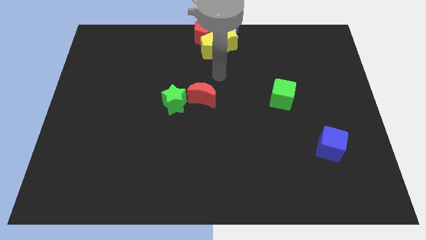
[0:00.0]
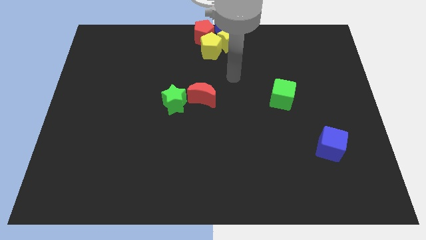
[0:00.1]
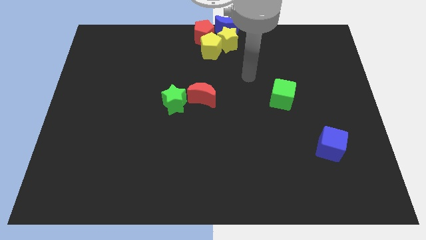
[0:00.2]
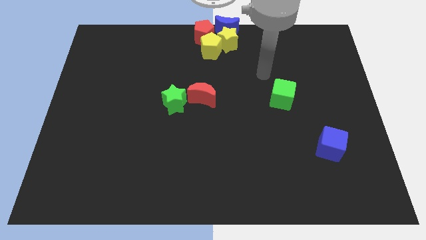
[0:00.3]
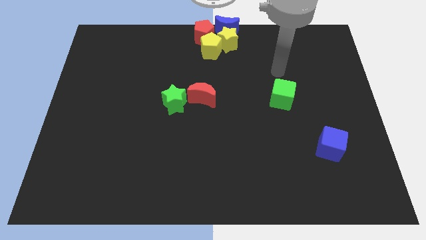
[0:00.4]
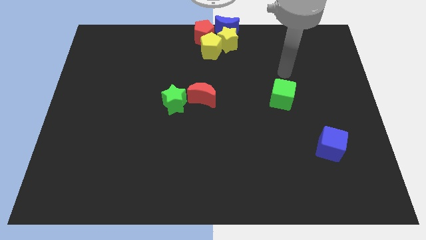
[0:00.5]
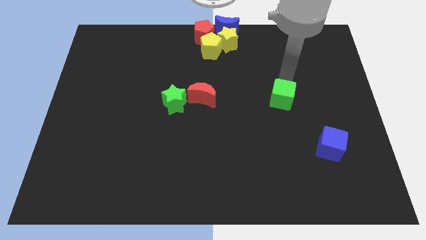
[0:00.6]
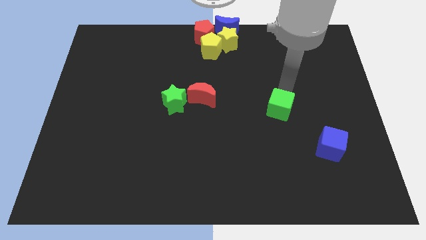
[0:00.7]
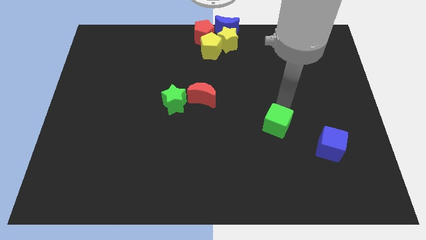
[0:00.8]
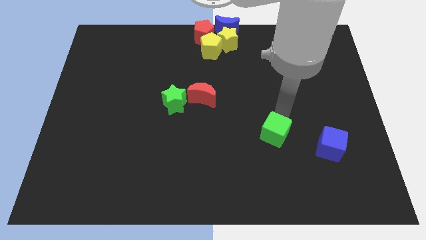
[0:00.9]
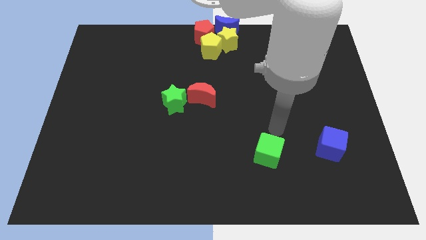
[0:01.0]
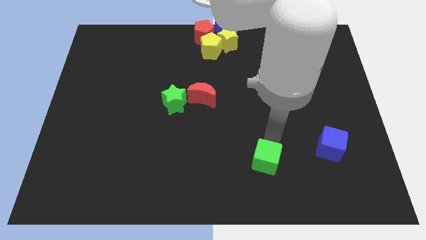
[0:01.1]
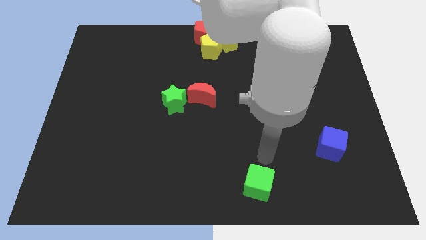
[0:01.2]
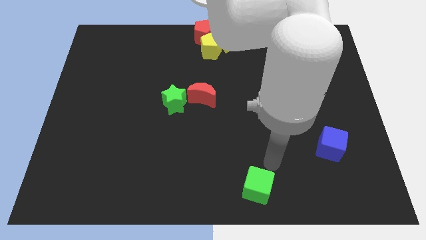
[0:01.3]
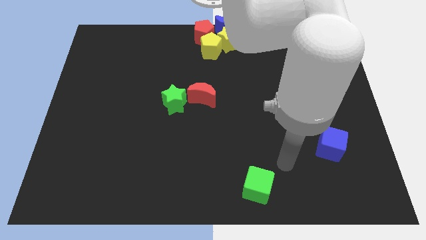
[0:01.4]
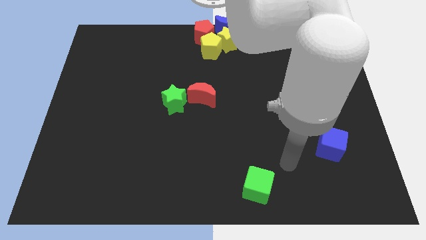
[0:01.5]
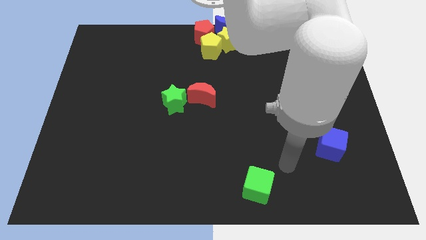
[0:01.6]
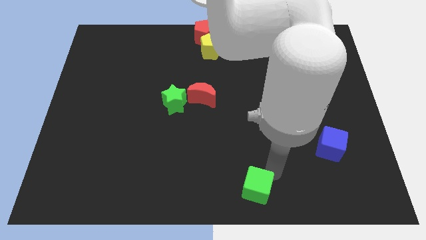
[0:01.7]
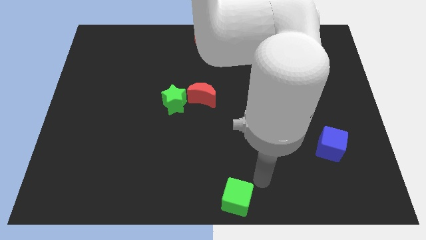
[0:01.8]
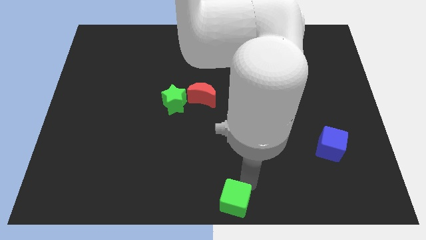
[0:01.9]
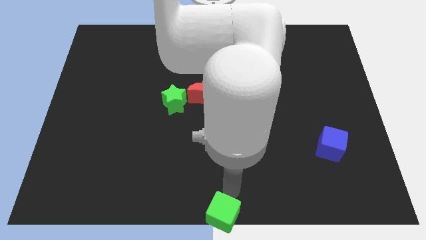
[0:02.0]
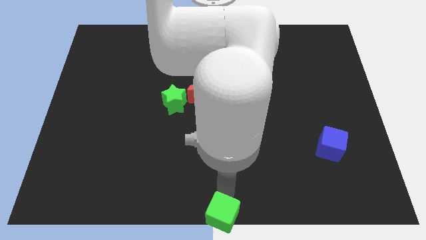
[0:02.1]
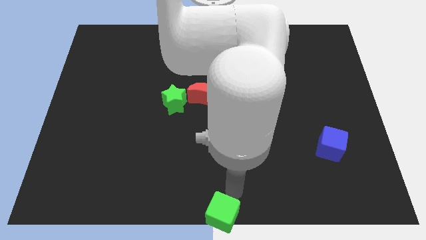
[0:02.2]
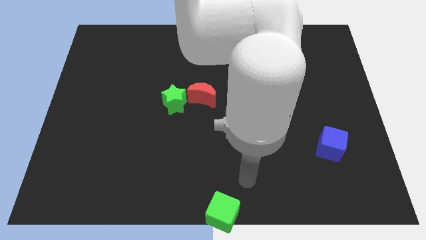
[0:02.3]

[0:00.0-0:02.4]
move the green bock towards the bottom

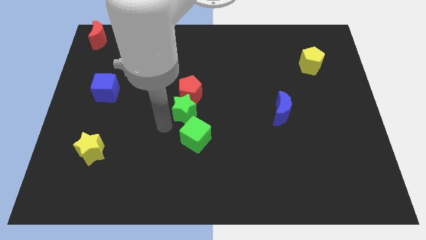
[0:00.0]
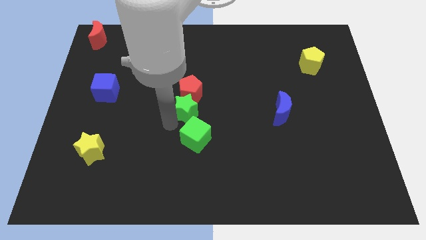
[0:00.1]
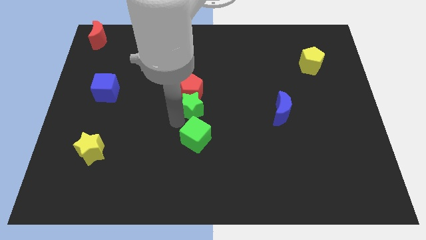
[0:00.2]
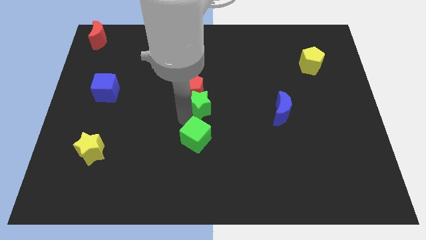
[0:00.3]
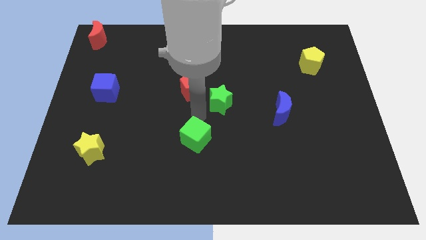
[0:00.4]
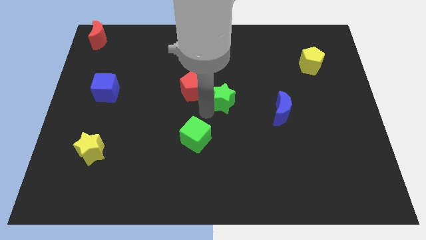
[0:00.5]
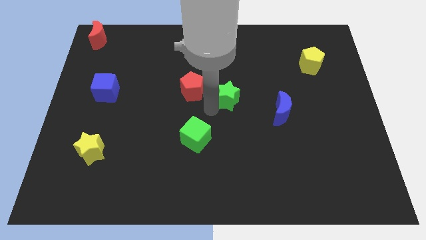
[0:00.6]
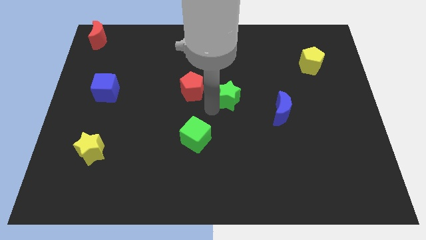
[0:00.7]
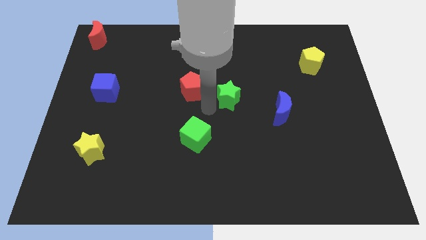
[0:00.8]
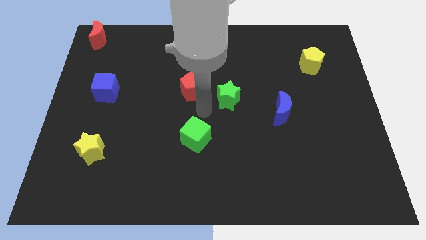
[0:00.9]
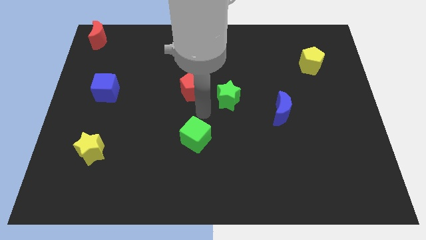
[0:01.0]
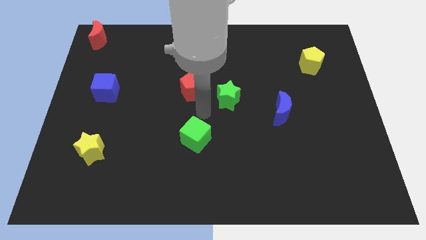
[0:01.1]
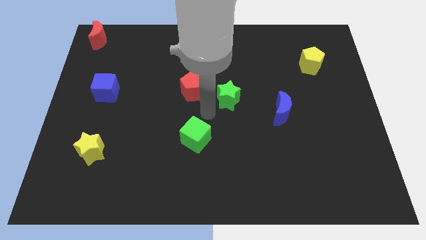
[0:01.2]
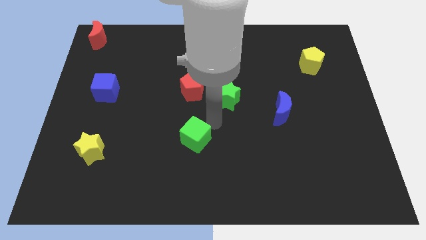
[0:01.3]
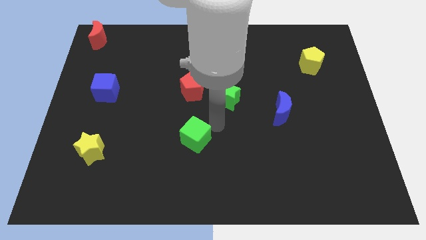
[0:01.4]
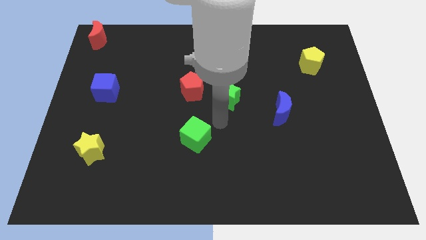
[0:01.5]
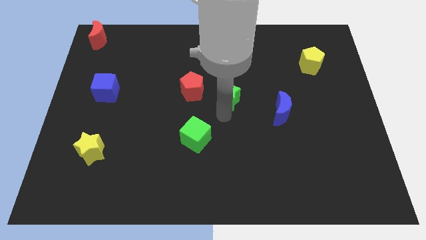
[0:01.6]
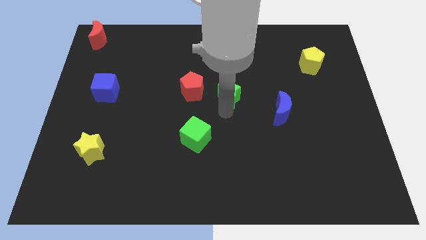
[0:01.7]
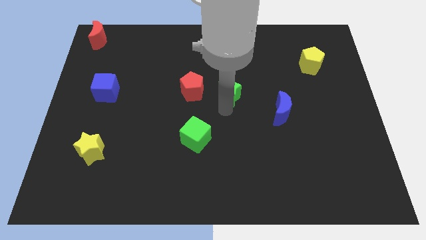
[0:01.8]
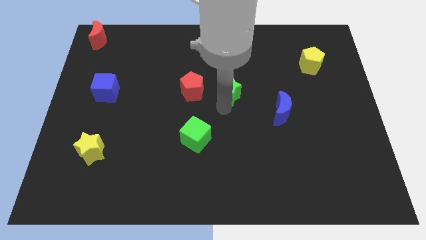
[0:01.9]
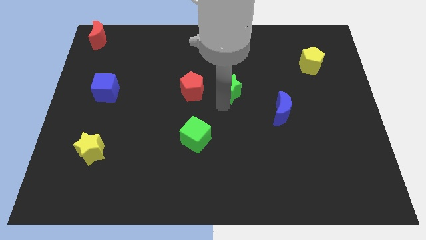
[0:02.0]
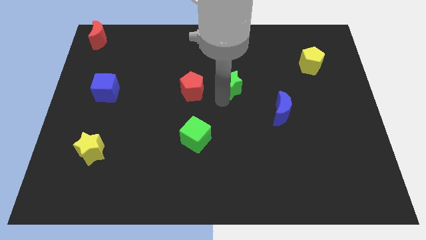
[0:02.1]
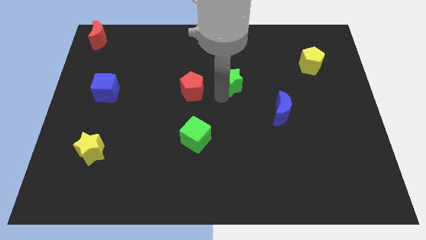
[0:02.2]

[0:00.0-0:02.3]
move the green star to the right of the red pentagon

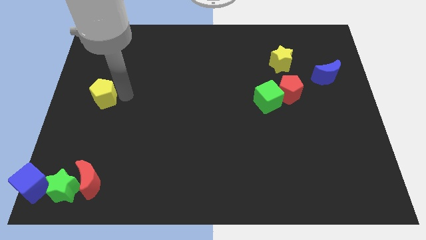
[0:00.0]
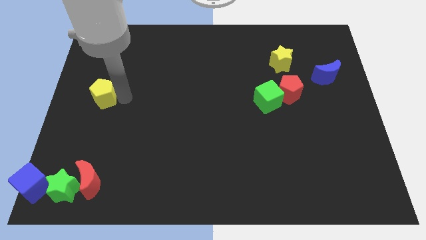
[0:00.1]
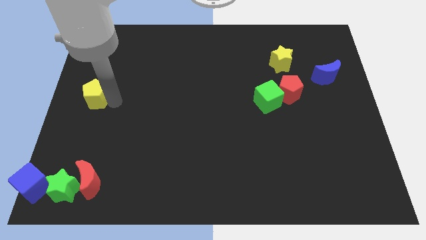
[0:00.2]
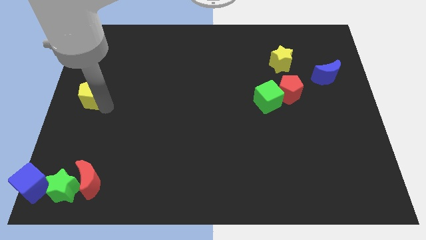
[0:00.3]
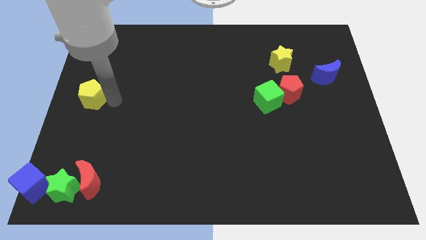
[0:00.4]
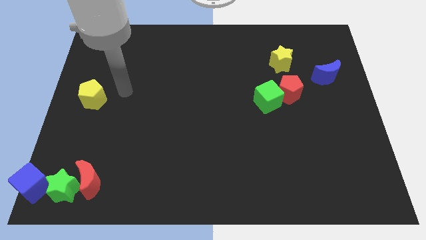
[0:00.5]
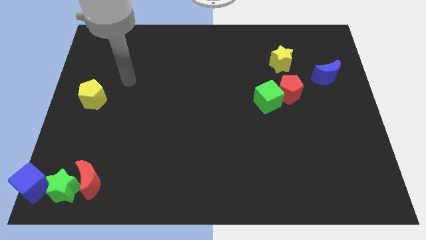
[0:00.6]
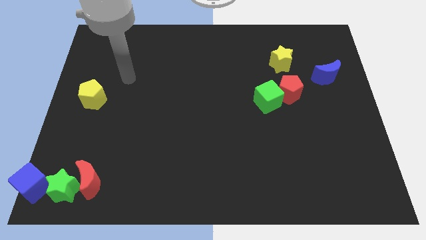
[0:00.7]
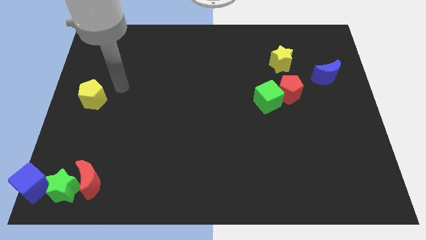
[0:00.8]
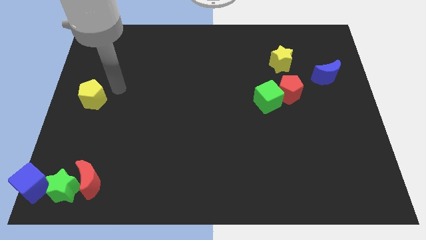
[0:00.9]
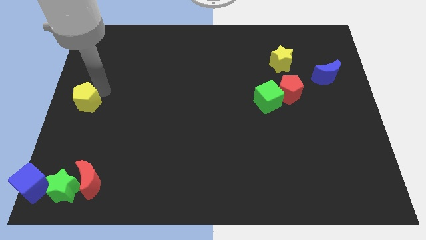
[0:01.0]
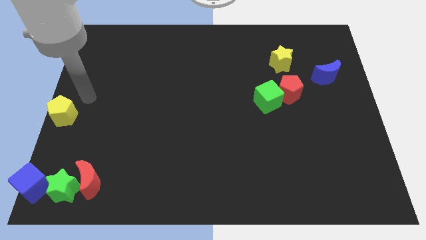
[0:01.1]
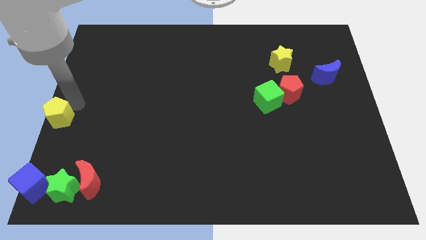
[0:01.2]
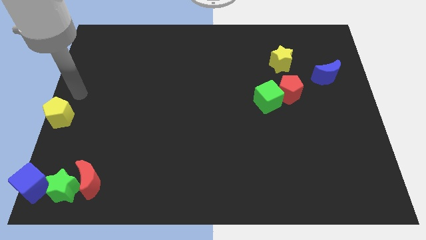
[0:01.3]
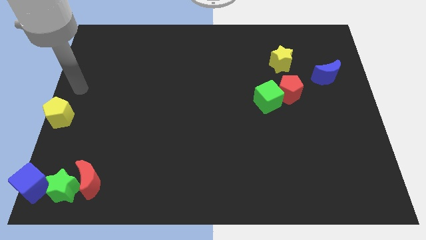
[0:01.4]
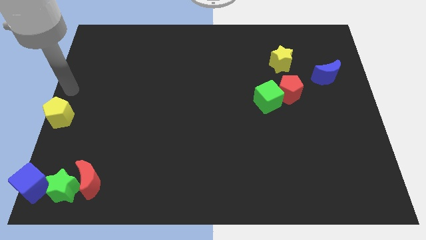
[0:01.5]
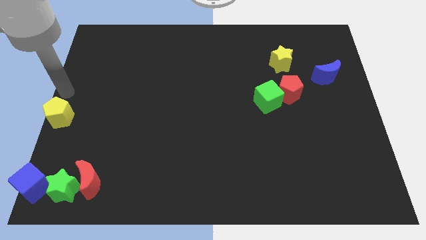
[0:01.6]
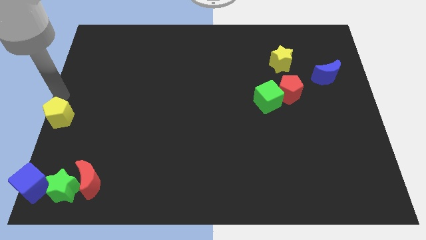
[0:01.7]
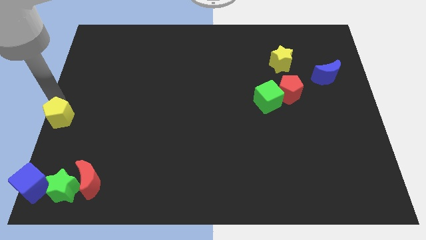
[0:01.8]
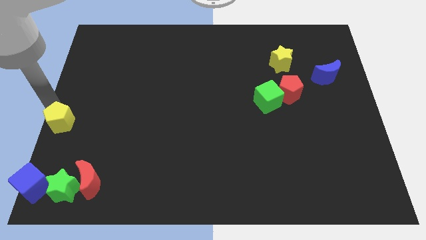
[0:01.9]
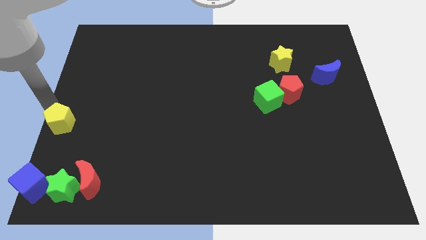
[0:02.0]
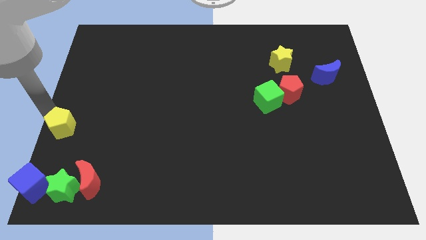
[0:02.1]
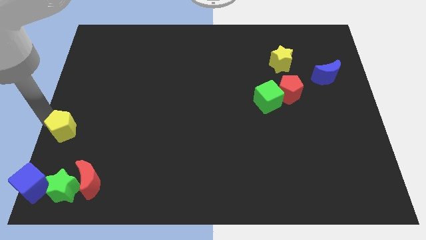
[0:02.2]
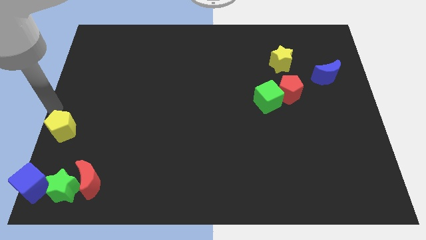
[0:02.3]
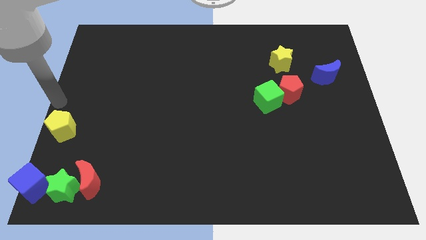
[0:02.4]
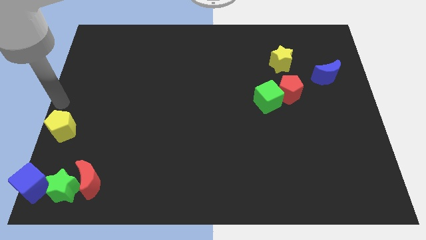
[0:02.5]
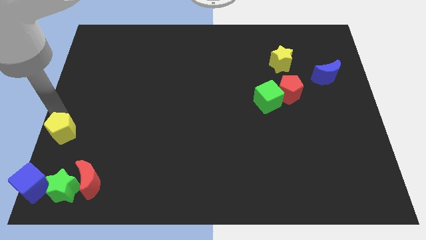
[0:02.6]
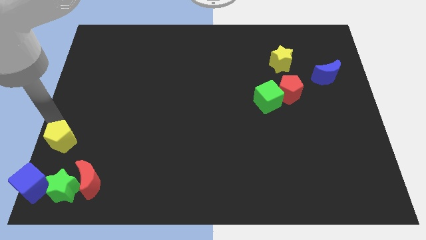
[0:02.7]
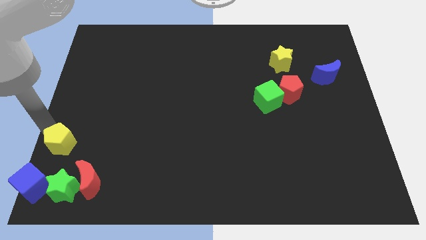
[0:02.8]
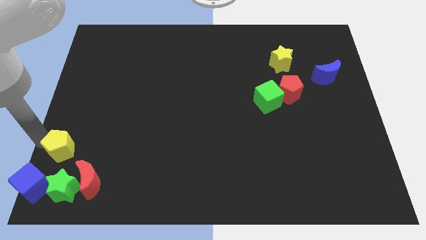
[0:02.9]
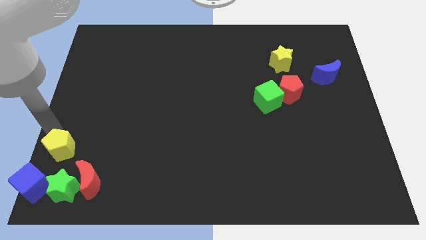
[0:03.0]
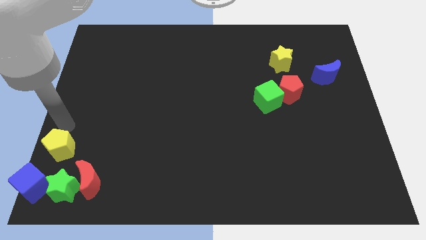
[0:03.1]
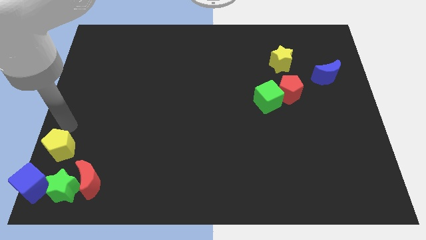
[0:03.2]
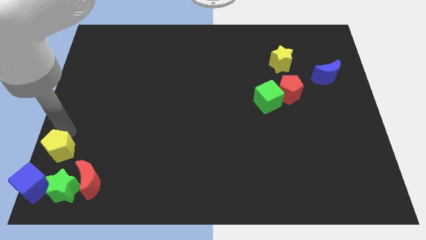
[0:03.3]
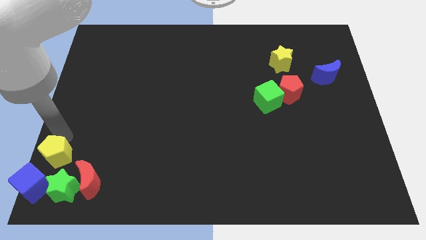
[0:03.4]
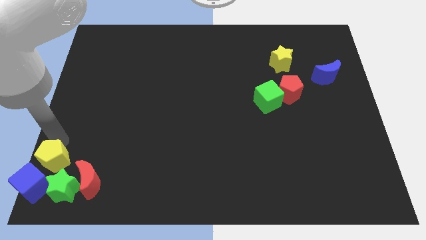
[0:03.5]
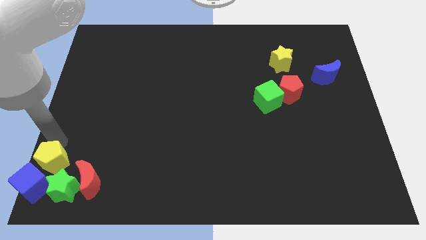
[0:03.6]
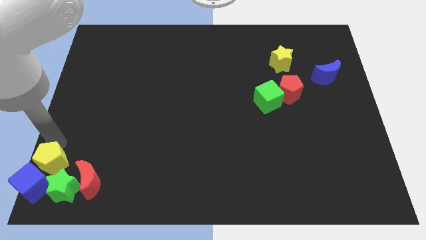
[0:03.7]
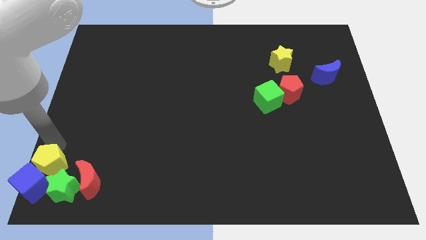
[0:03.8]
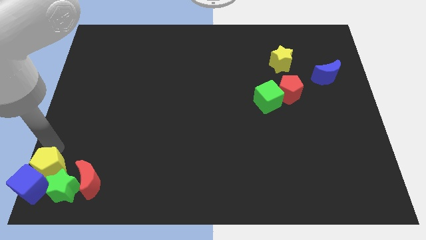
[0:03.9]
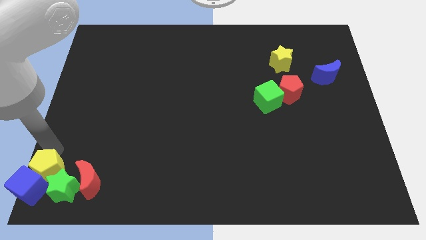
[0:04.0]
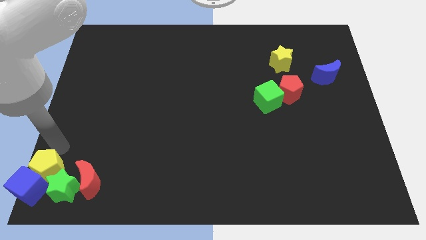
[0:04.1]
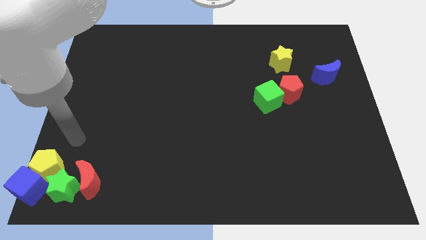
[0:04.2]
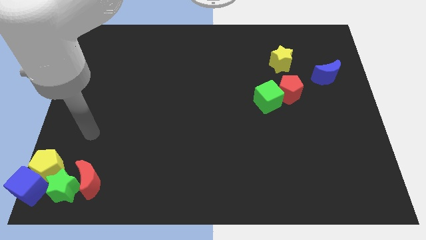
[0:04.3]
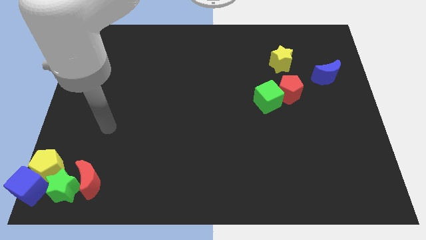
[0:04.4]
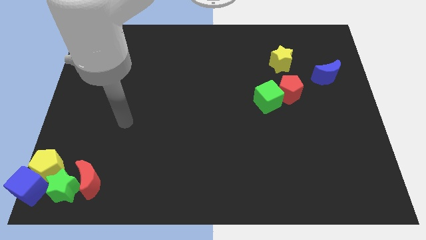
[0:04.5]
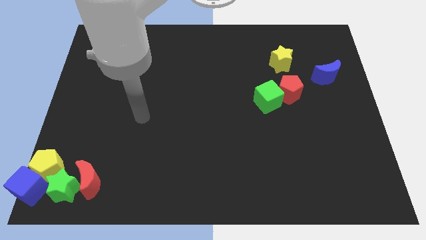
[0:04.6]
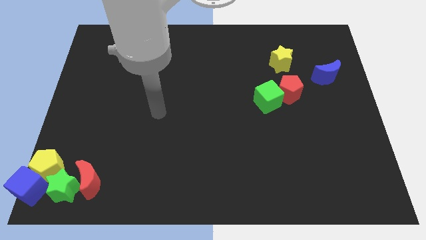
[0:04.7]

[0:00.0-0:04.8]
move the yellow pentagon towards the top side of the blue cube
